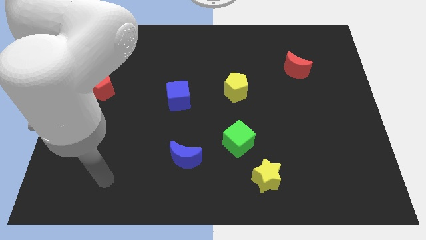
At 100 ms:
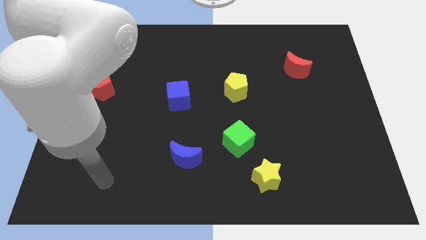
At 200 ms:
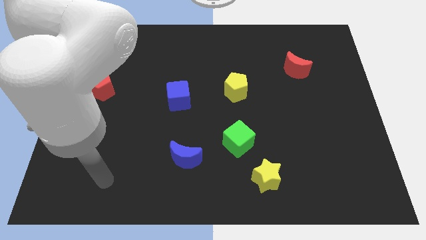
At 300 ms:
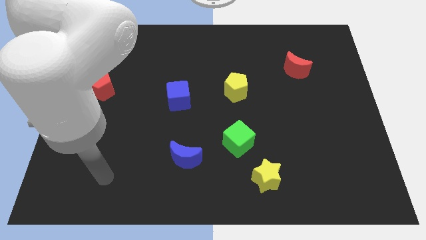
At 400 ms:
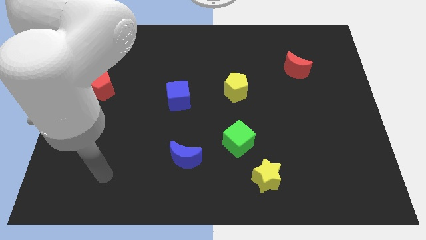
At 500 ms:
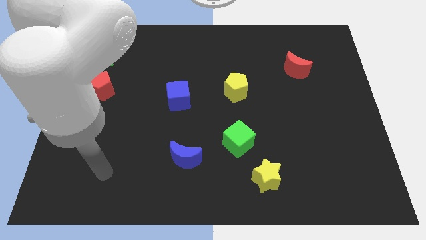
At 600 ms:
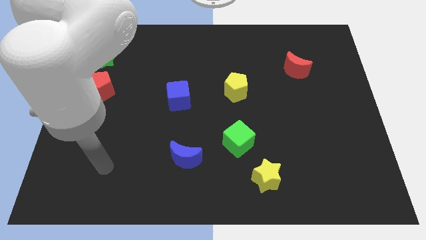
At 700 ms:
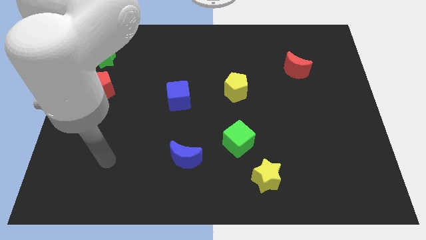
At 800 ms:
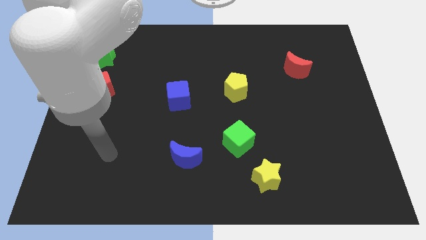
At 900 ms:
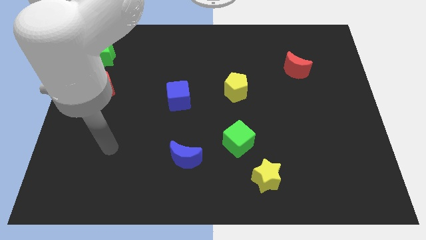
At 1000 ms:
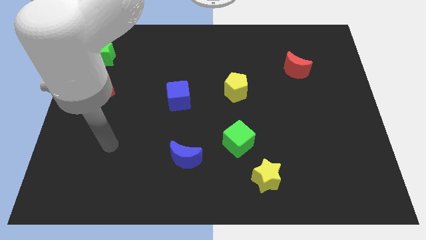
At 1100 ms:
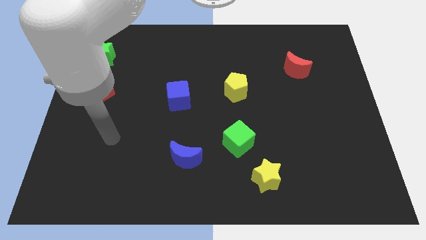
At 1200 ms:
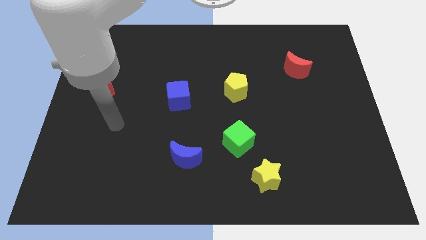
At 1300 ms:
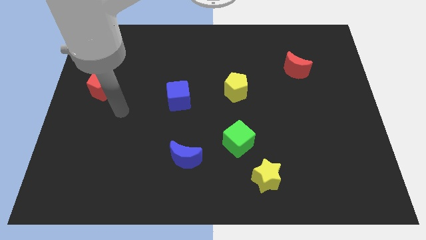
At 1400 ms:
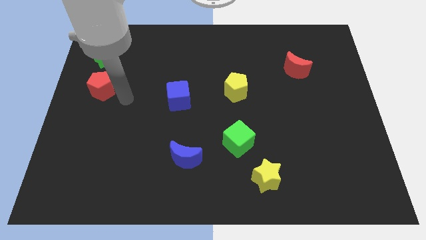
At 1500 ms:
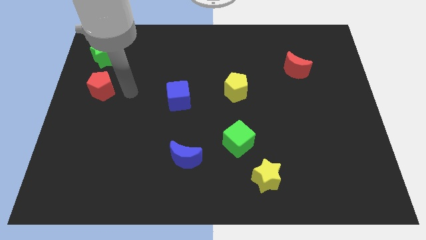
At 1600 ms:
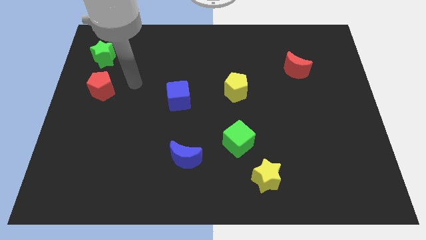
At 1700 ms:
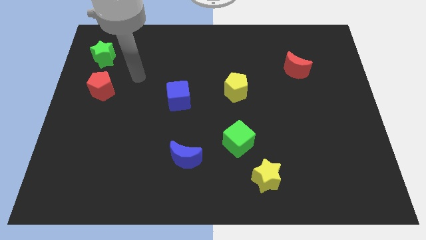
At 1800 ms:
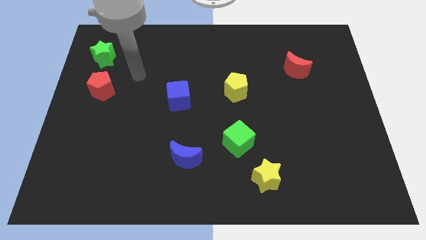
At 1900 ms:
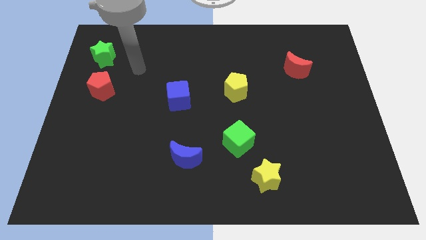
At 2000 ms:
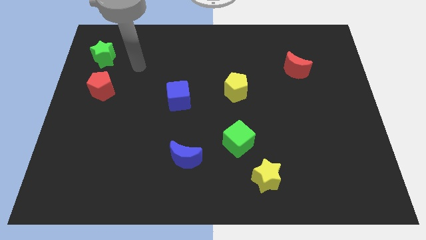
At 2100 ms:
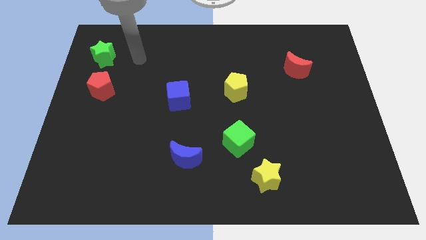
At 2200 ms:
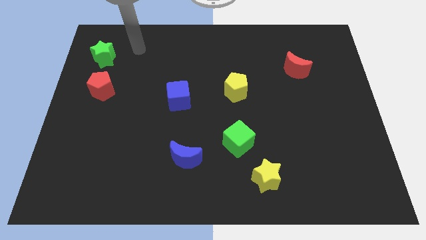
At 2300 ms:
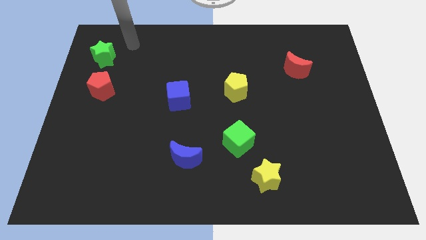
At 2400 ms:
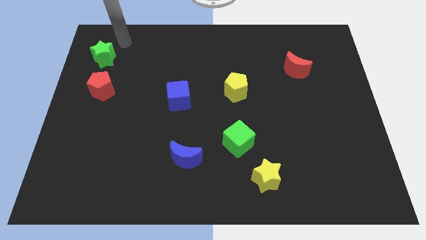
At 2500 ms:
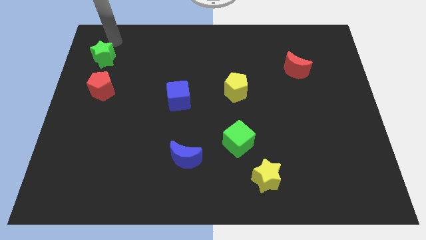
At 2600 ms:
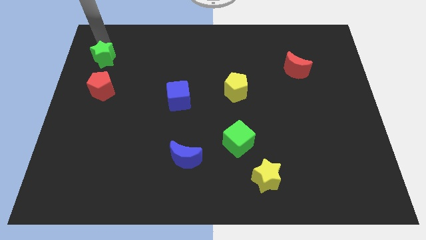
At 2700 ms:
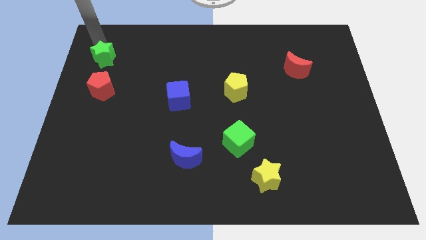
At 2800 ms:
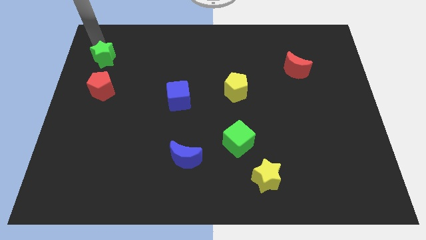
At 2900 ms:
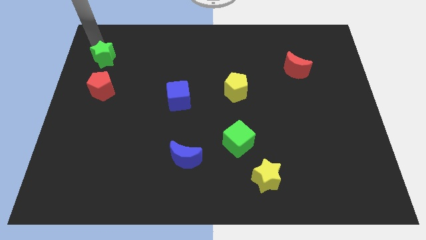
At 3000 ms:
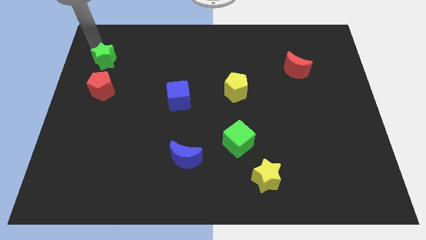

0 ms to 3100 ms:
move your arm on top of the green star

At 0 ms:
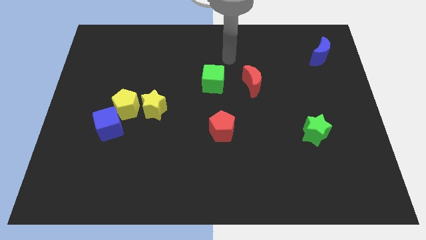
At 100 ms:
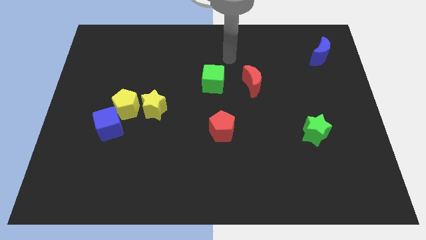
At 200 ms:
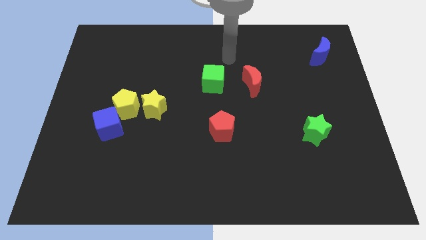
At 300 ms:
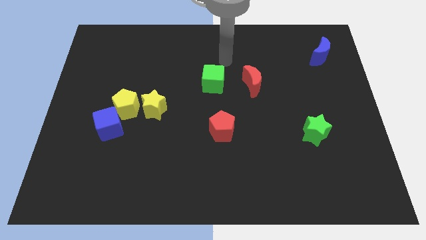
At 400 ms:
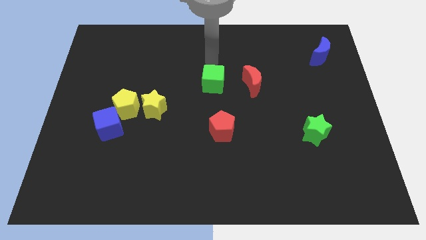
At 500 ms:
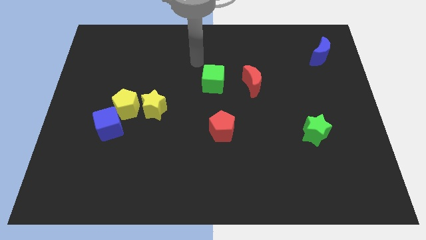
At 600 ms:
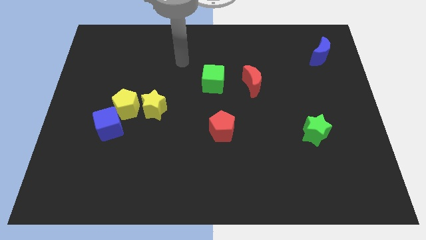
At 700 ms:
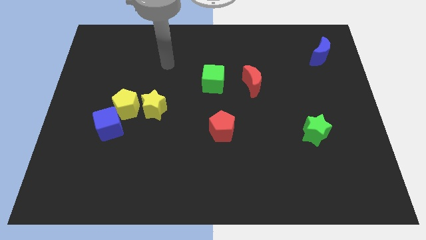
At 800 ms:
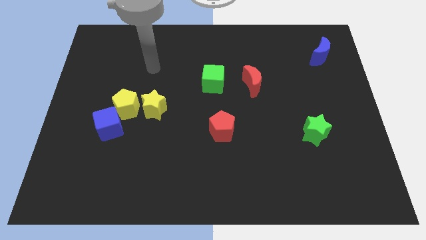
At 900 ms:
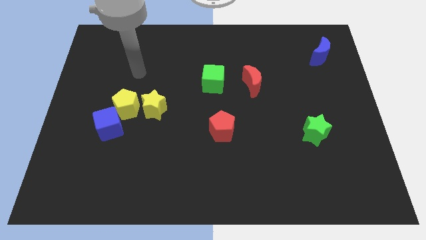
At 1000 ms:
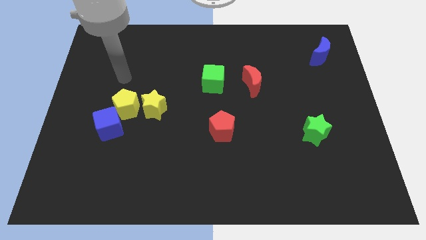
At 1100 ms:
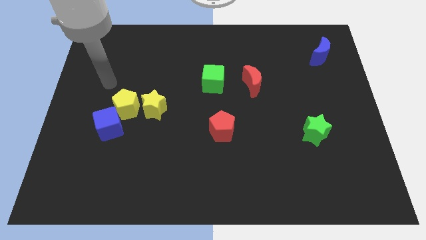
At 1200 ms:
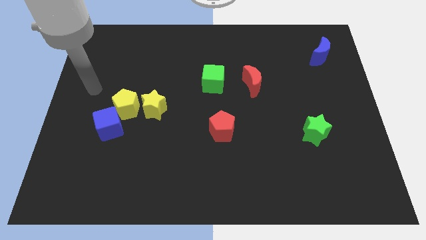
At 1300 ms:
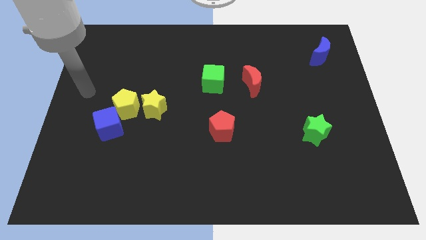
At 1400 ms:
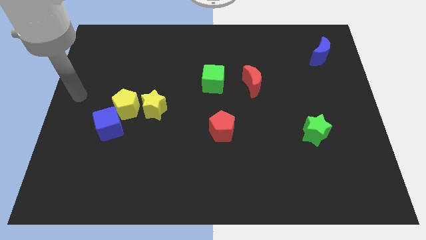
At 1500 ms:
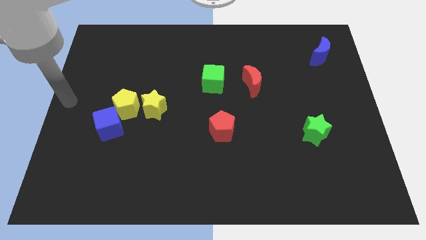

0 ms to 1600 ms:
move your arm away from the top side of the green cube

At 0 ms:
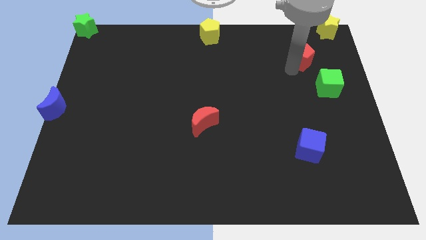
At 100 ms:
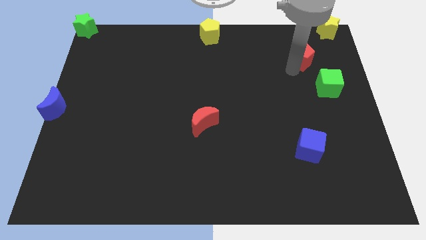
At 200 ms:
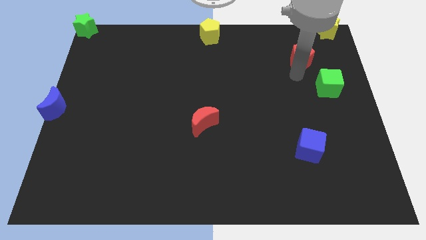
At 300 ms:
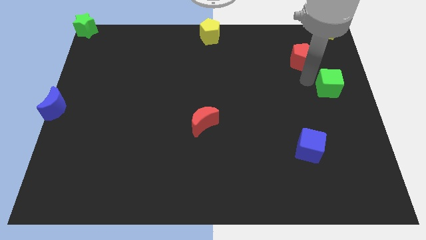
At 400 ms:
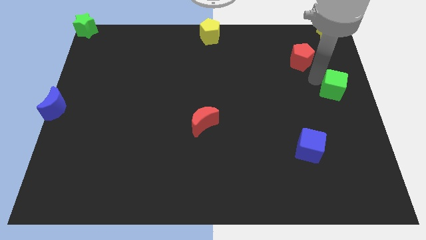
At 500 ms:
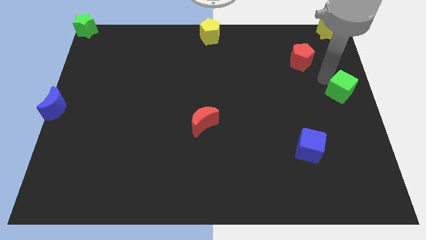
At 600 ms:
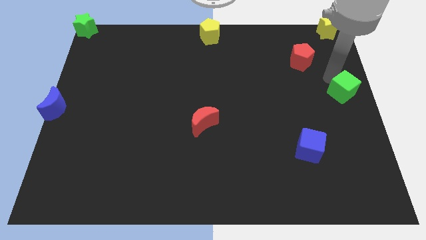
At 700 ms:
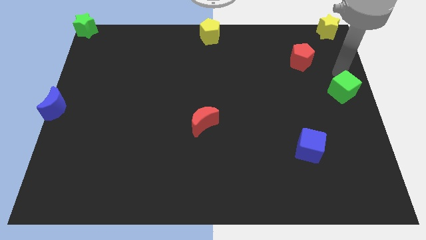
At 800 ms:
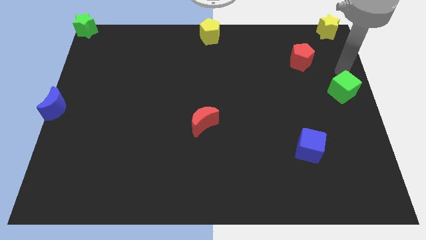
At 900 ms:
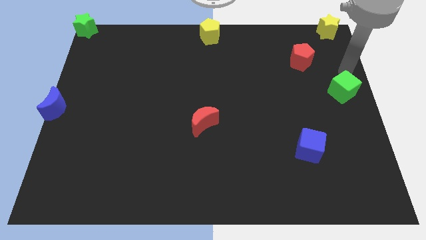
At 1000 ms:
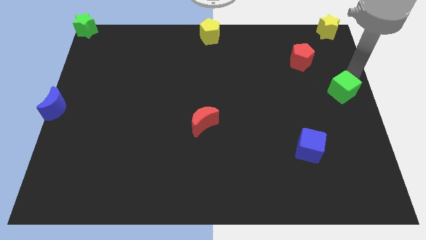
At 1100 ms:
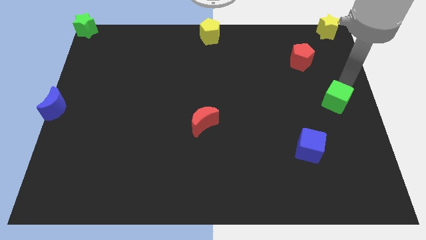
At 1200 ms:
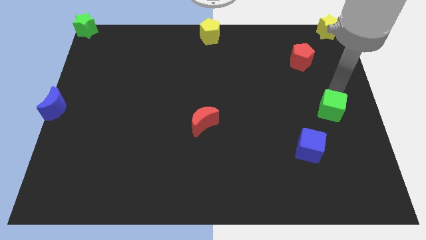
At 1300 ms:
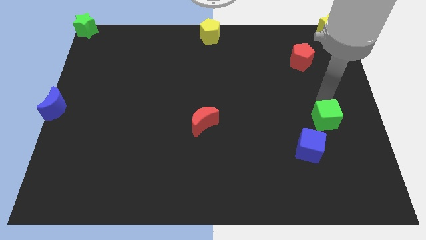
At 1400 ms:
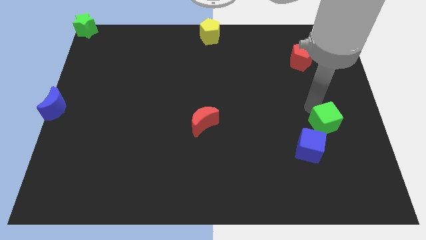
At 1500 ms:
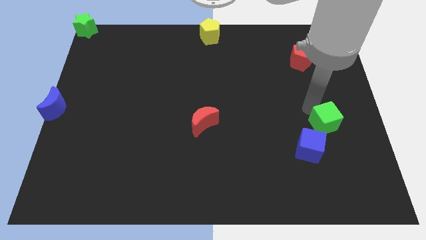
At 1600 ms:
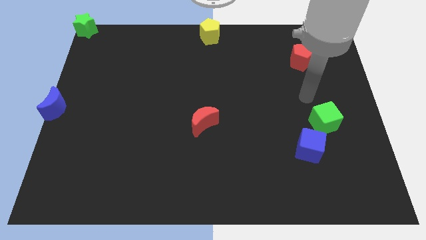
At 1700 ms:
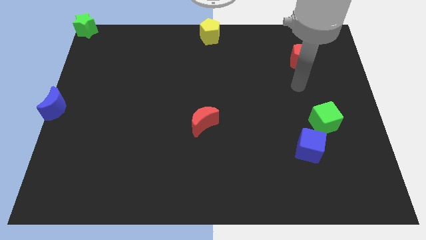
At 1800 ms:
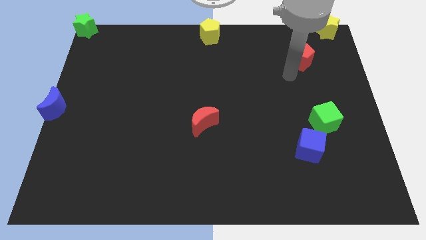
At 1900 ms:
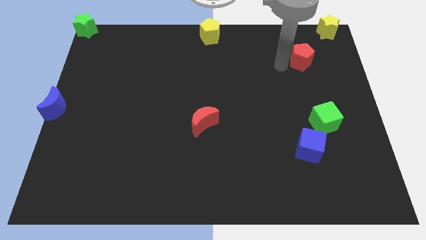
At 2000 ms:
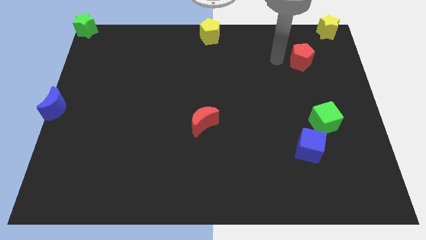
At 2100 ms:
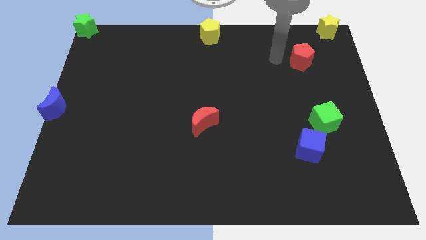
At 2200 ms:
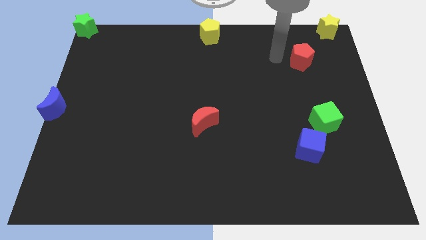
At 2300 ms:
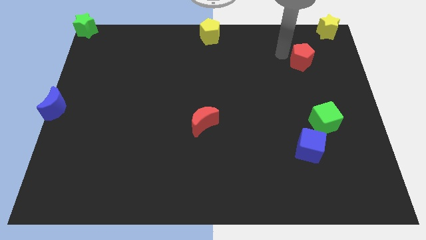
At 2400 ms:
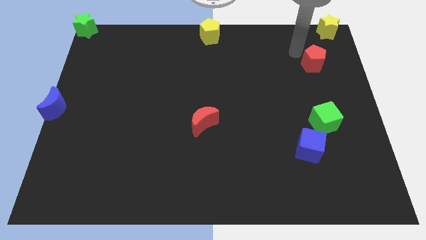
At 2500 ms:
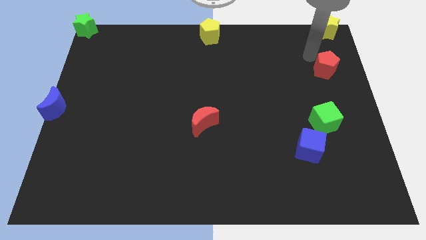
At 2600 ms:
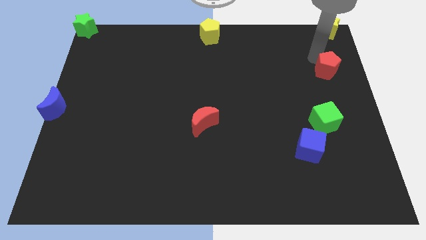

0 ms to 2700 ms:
move the green cube above the blue cube

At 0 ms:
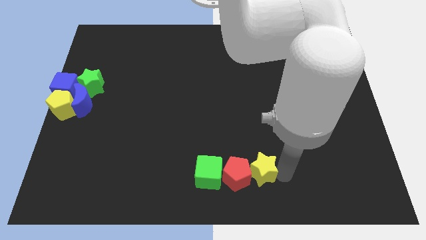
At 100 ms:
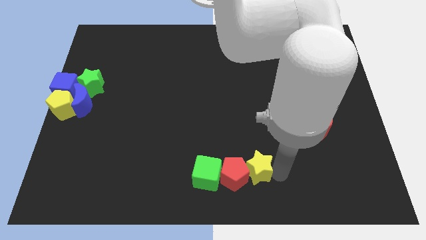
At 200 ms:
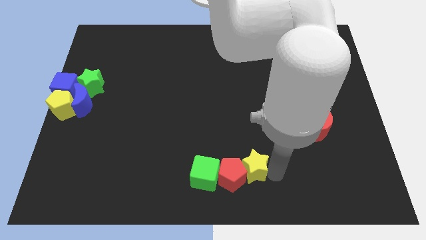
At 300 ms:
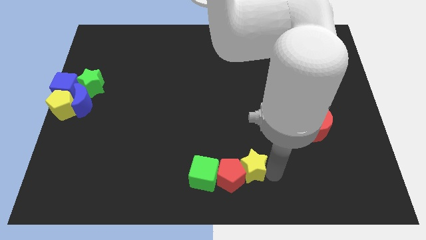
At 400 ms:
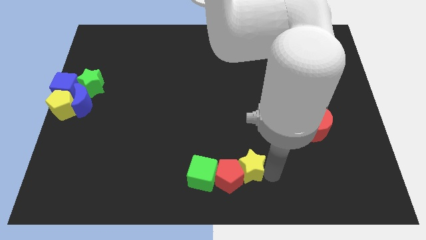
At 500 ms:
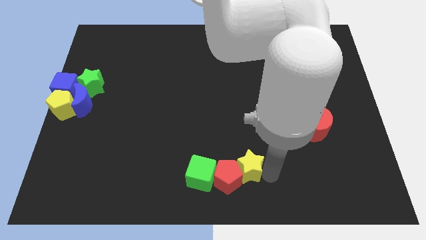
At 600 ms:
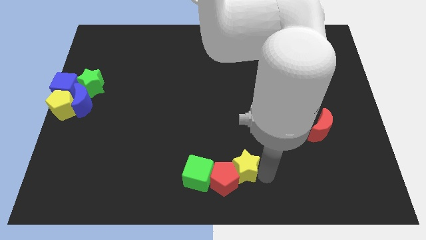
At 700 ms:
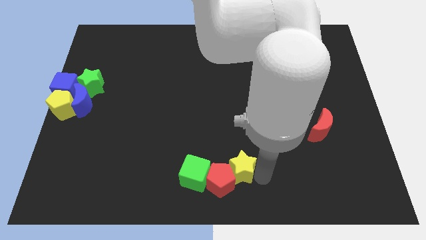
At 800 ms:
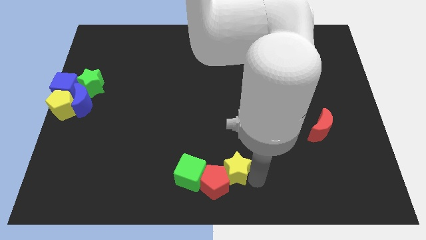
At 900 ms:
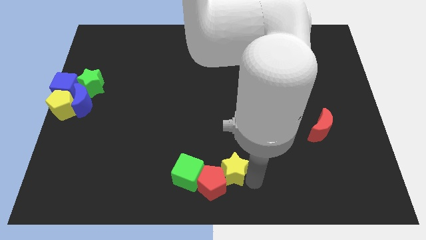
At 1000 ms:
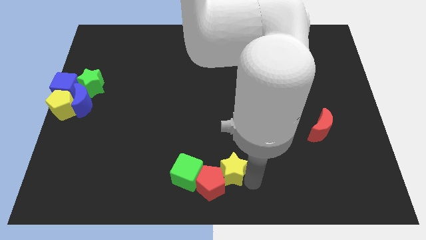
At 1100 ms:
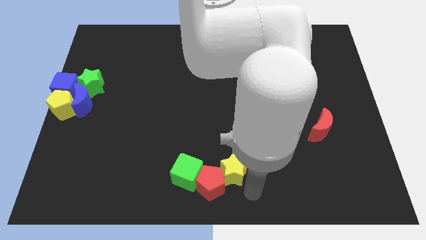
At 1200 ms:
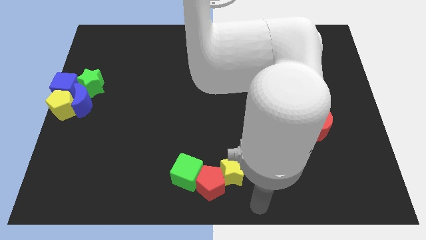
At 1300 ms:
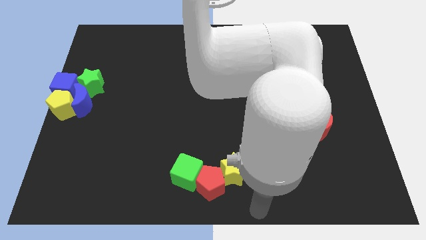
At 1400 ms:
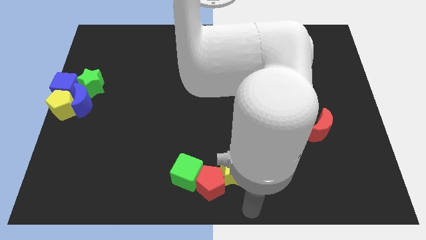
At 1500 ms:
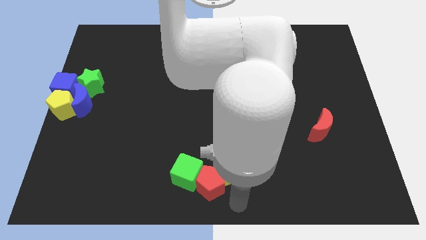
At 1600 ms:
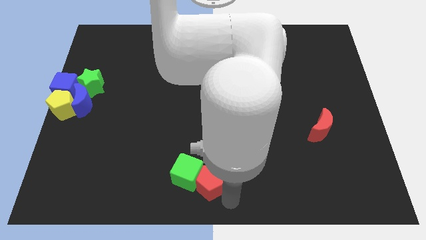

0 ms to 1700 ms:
push the yellow star into the red pentagon
